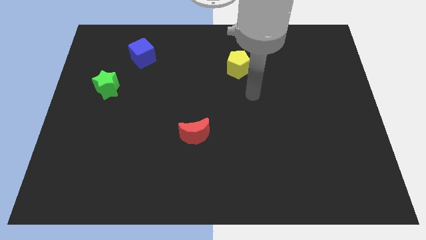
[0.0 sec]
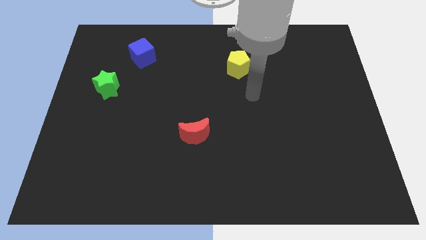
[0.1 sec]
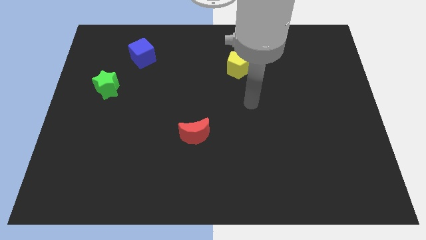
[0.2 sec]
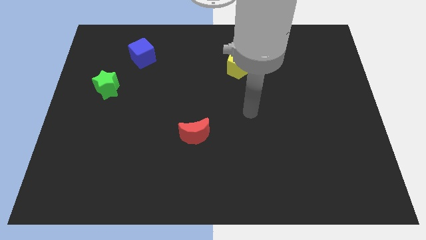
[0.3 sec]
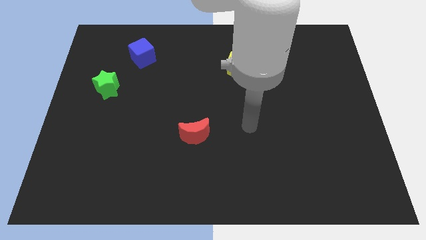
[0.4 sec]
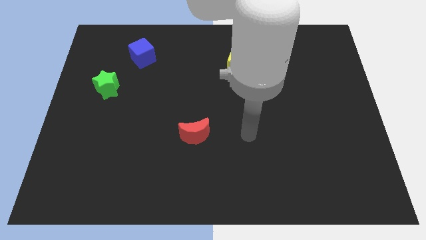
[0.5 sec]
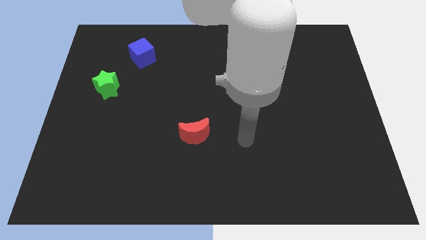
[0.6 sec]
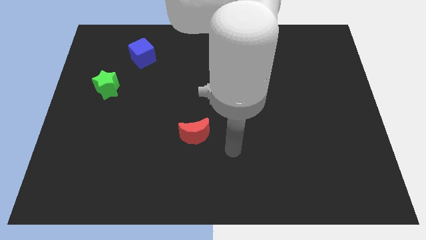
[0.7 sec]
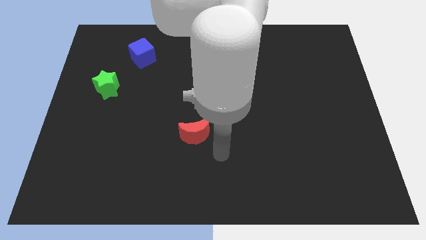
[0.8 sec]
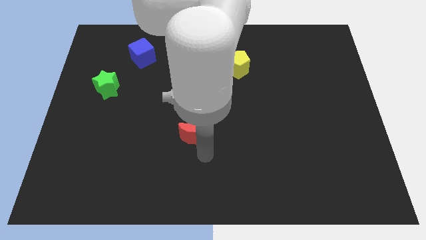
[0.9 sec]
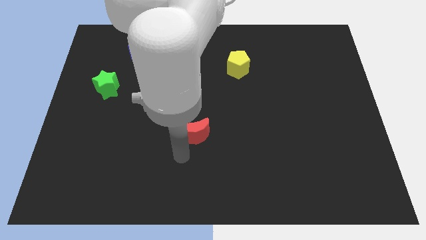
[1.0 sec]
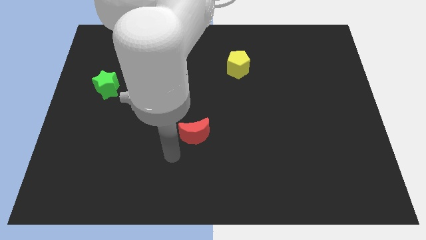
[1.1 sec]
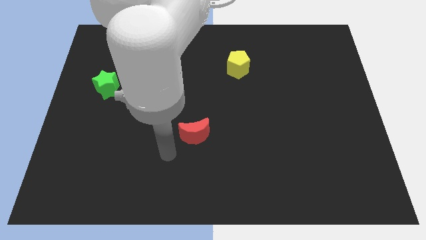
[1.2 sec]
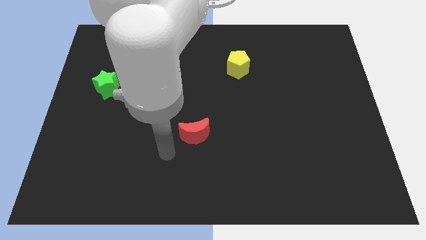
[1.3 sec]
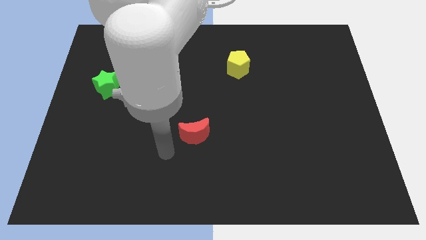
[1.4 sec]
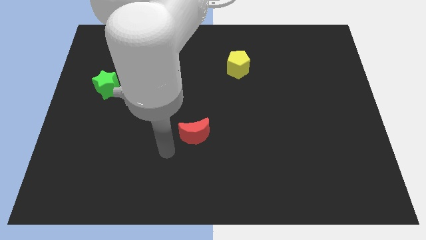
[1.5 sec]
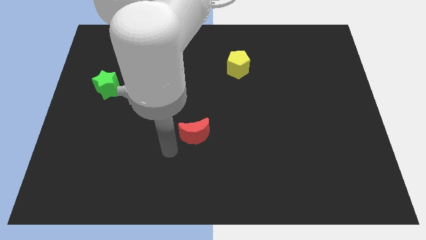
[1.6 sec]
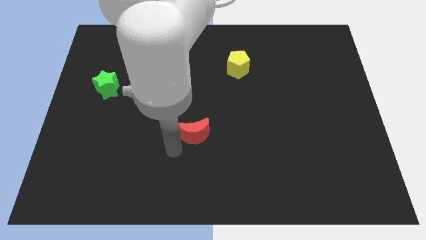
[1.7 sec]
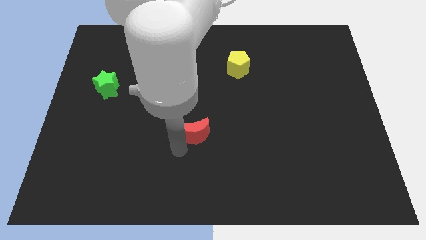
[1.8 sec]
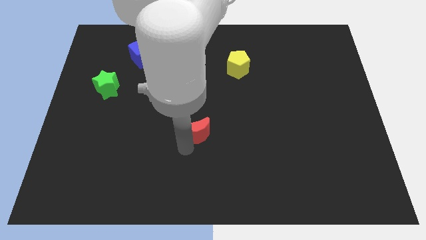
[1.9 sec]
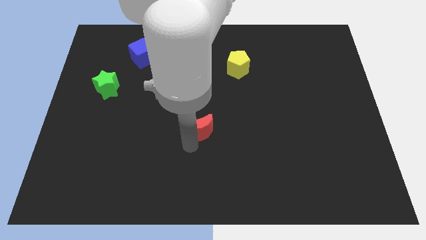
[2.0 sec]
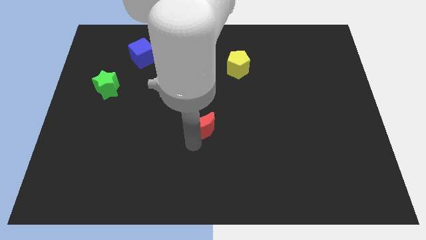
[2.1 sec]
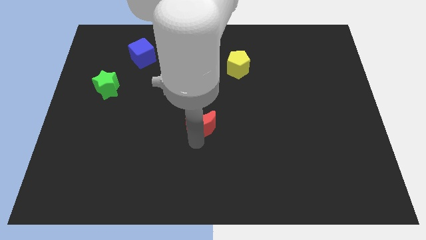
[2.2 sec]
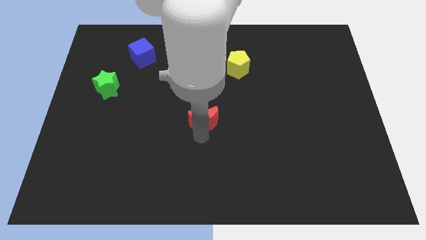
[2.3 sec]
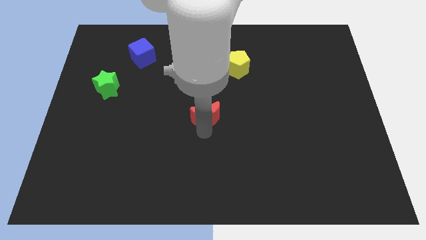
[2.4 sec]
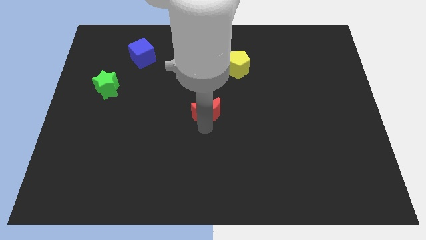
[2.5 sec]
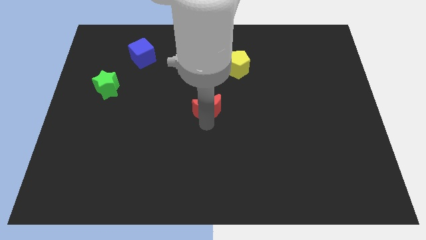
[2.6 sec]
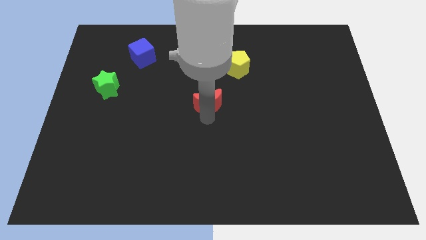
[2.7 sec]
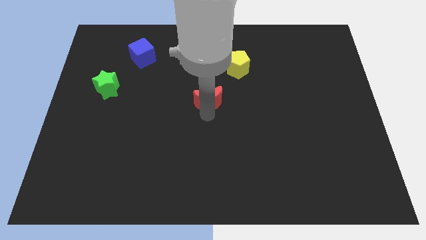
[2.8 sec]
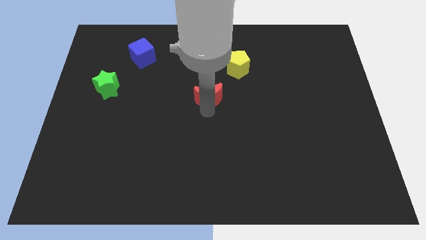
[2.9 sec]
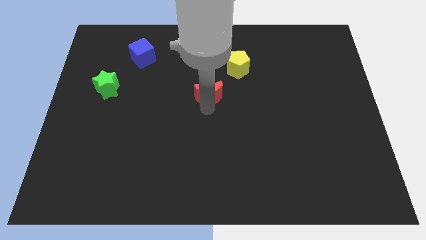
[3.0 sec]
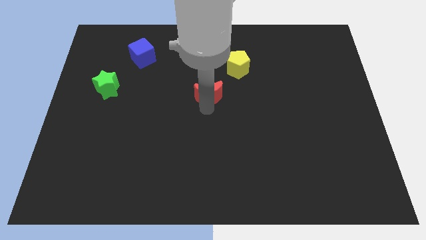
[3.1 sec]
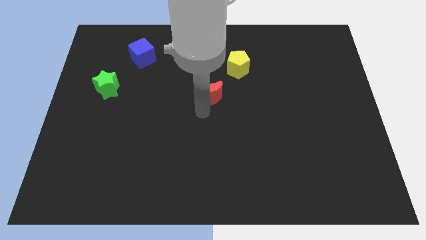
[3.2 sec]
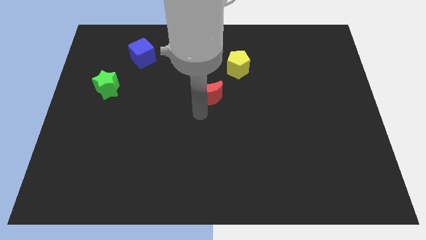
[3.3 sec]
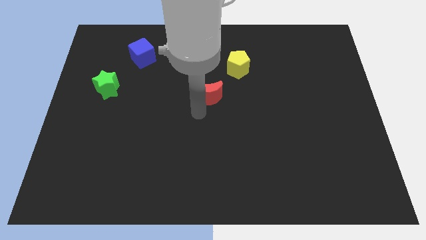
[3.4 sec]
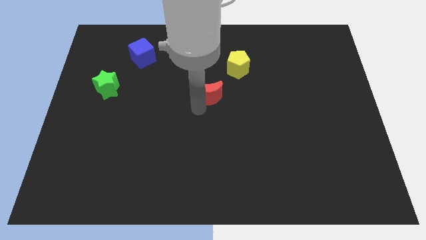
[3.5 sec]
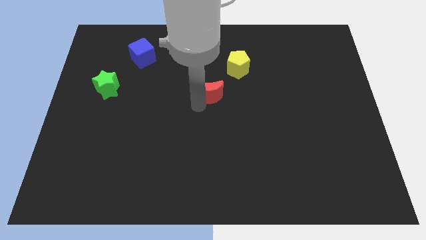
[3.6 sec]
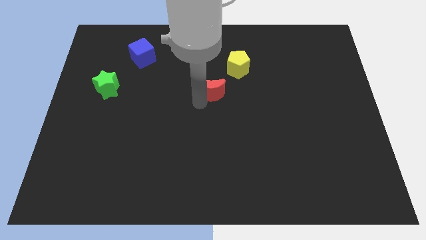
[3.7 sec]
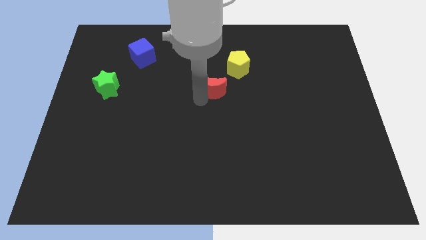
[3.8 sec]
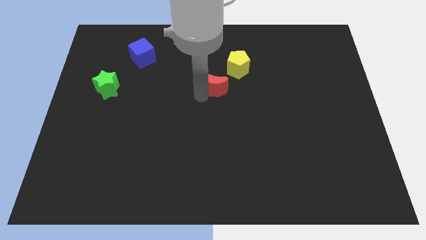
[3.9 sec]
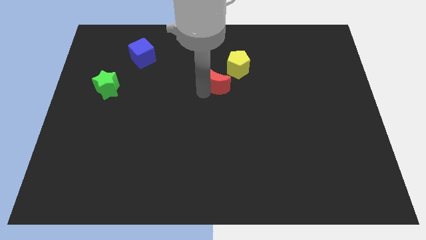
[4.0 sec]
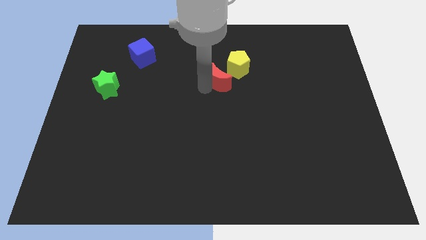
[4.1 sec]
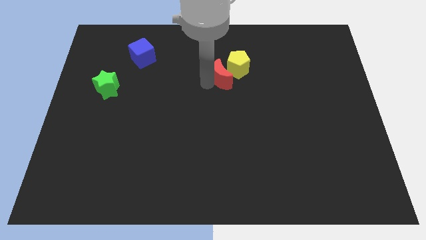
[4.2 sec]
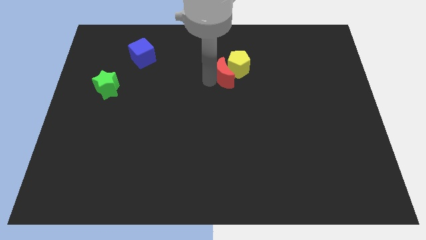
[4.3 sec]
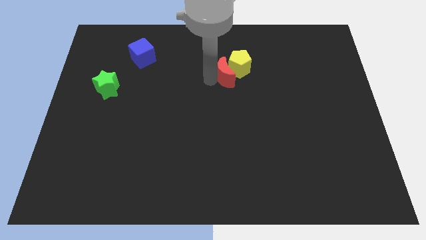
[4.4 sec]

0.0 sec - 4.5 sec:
put the red block next to the yellow block

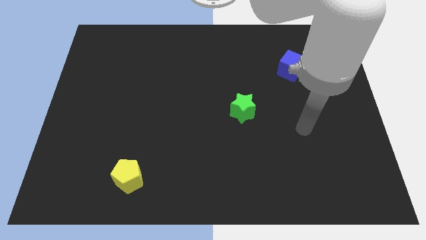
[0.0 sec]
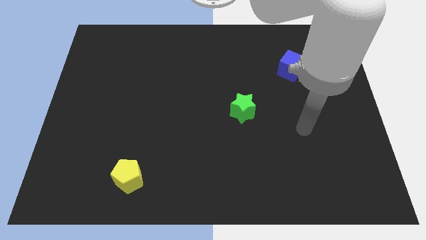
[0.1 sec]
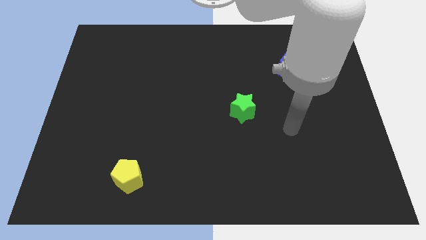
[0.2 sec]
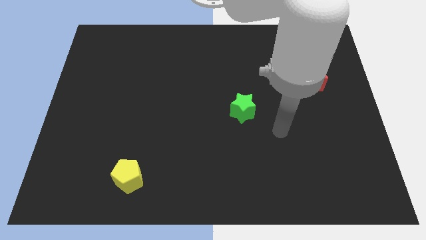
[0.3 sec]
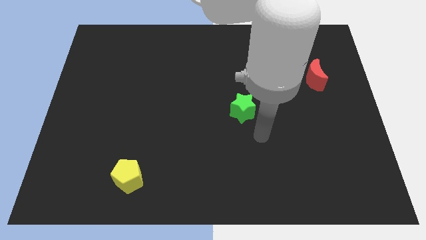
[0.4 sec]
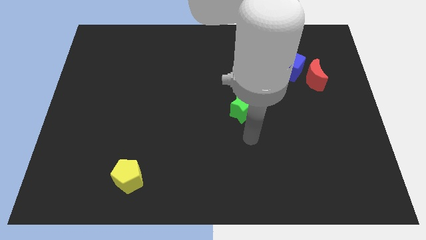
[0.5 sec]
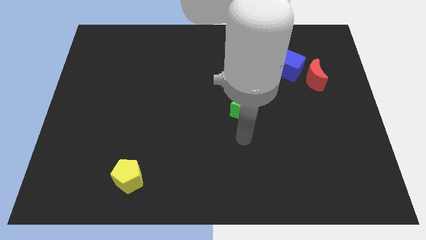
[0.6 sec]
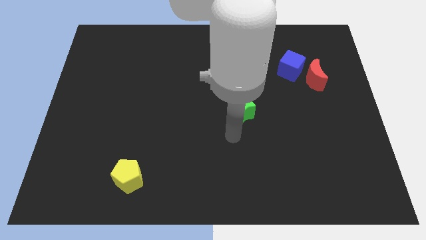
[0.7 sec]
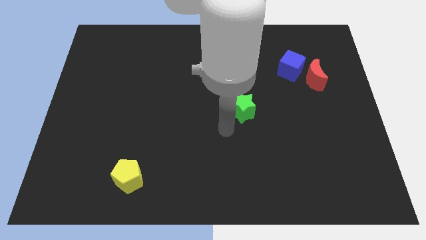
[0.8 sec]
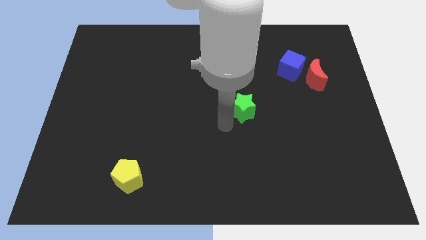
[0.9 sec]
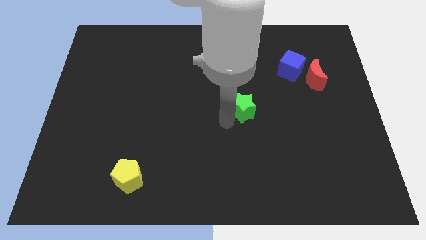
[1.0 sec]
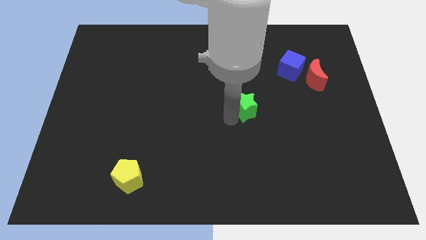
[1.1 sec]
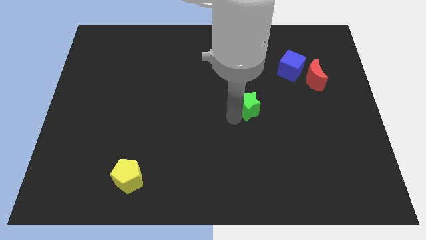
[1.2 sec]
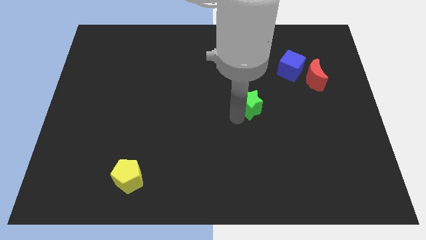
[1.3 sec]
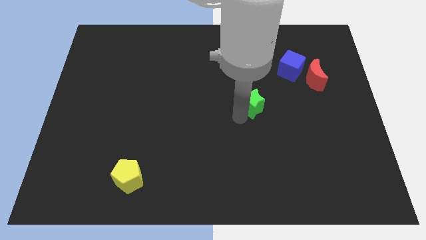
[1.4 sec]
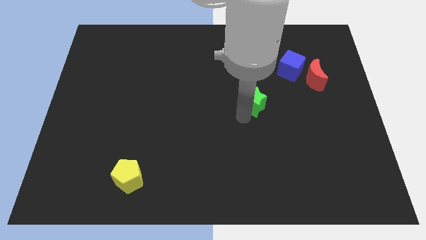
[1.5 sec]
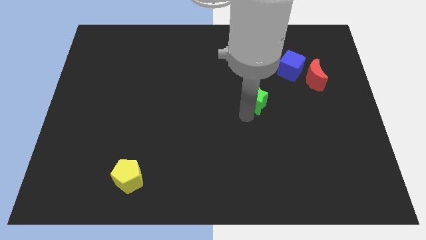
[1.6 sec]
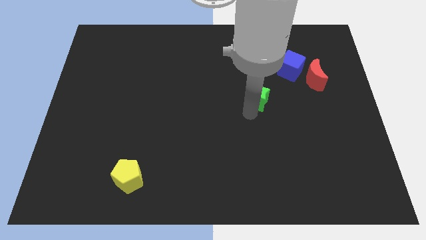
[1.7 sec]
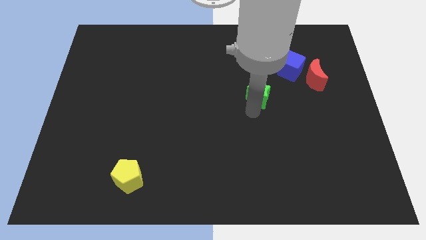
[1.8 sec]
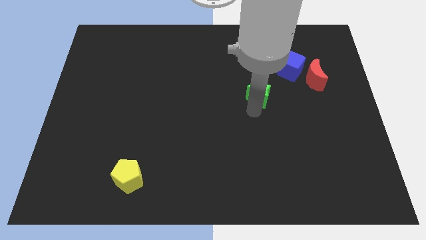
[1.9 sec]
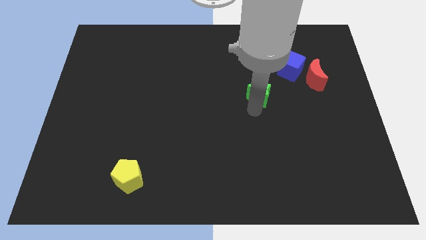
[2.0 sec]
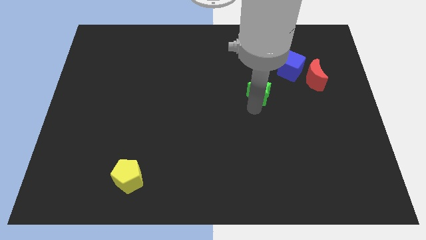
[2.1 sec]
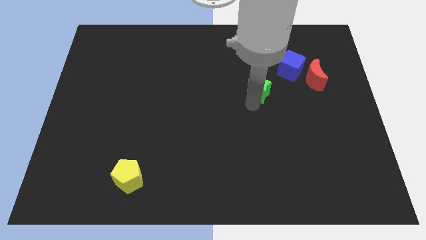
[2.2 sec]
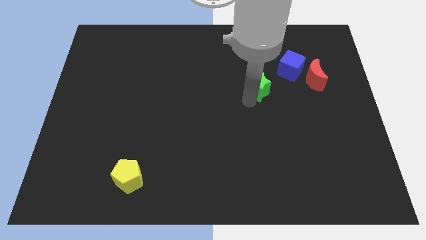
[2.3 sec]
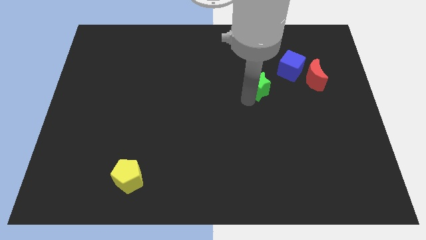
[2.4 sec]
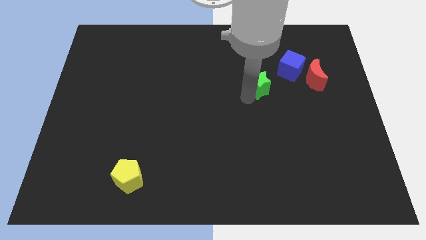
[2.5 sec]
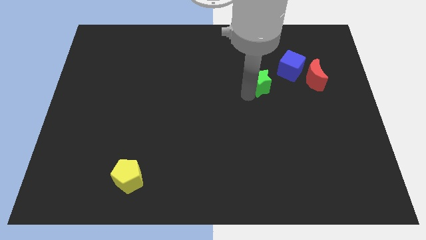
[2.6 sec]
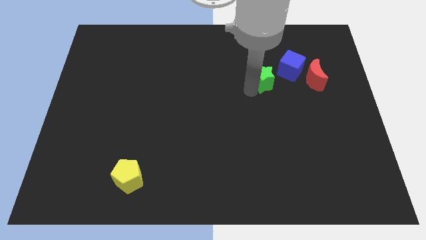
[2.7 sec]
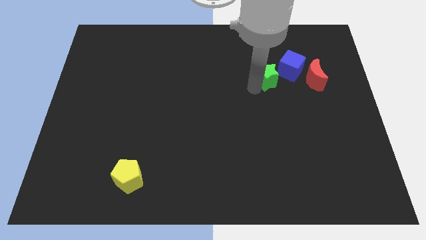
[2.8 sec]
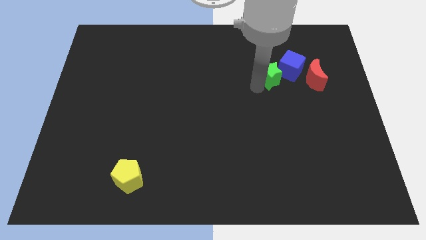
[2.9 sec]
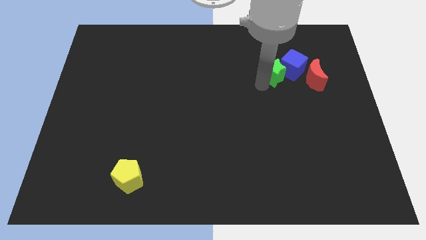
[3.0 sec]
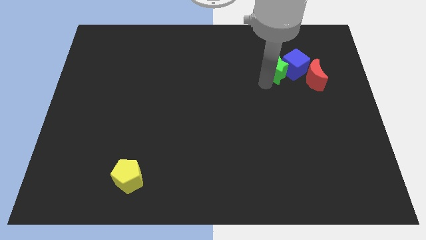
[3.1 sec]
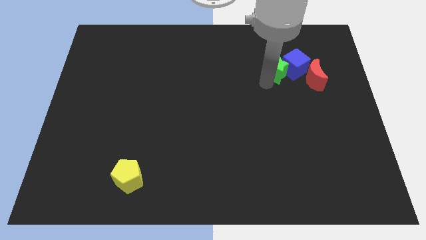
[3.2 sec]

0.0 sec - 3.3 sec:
slide the green star close to the blue cube

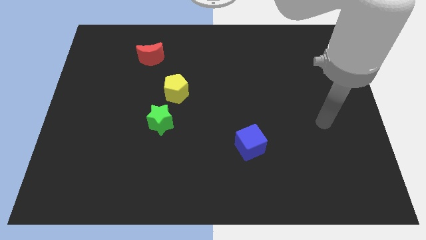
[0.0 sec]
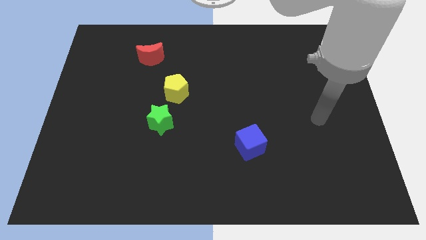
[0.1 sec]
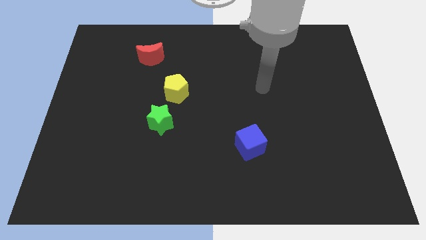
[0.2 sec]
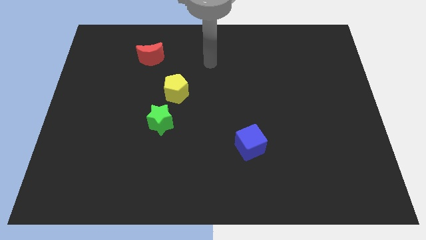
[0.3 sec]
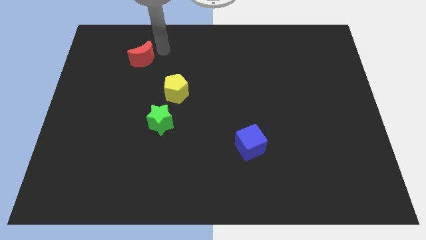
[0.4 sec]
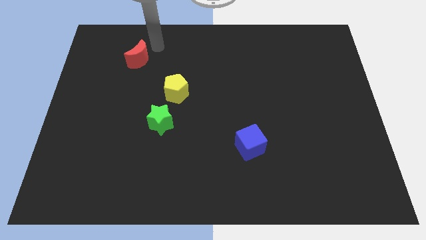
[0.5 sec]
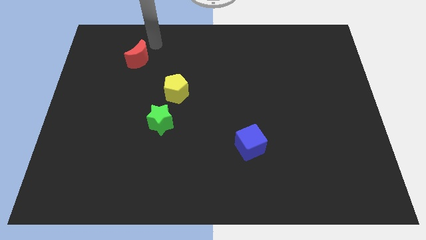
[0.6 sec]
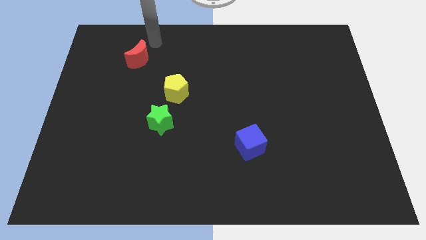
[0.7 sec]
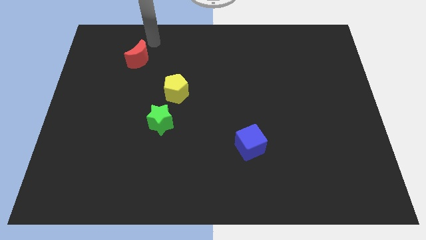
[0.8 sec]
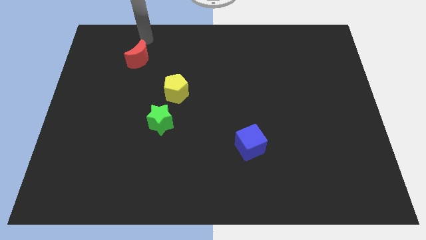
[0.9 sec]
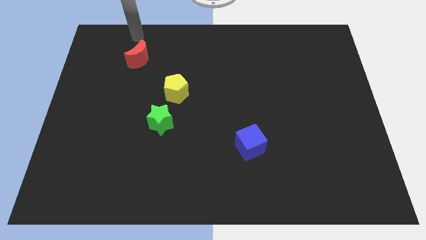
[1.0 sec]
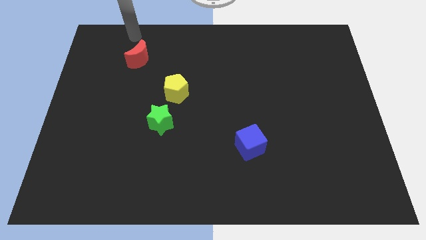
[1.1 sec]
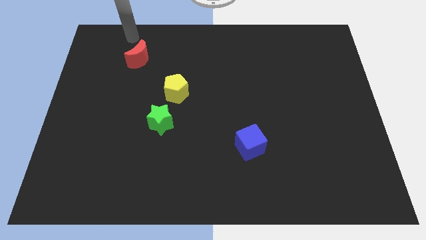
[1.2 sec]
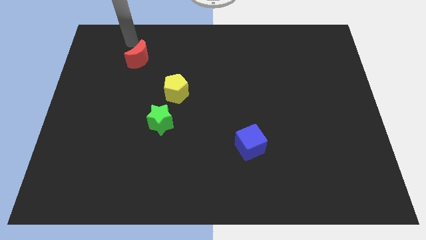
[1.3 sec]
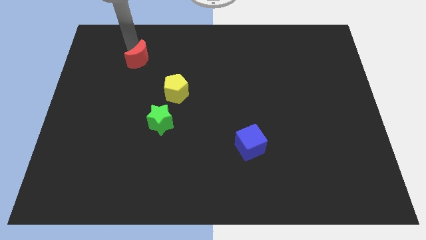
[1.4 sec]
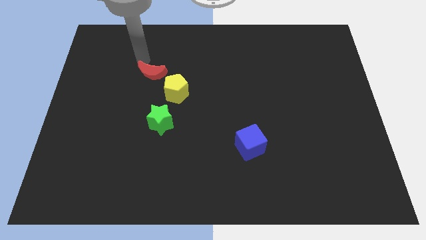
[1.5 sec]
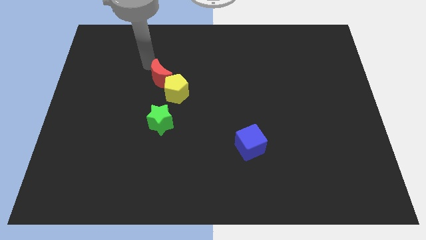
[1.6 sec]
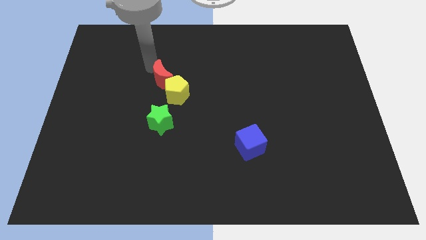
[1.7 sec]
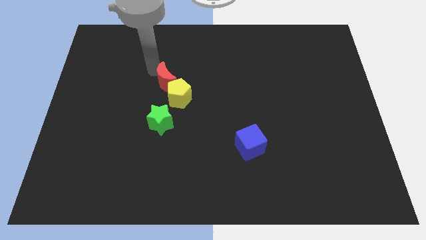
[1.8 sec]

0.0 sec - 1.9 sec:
push the moon next to the yellow block
